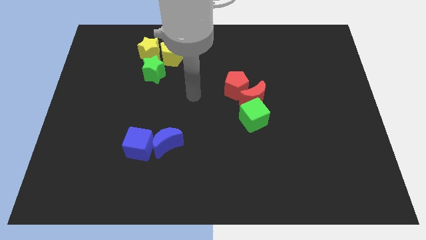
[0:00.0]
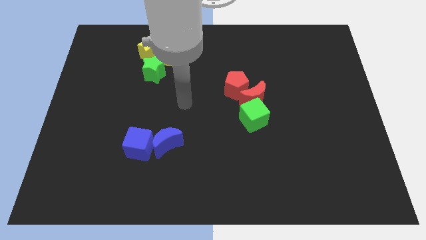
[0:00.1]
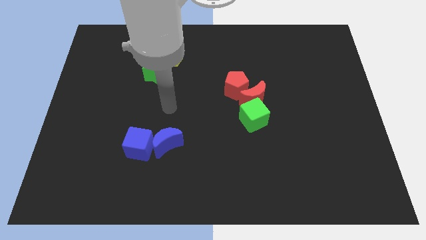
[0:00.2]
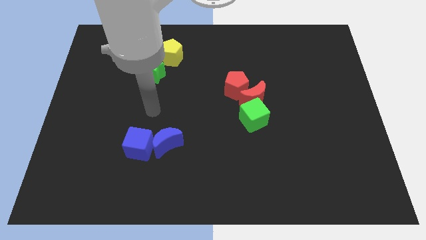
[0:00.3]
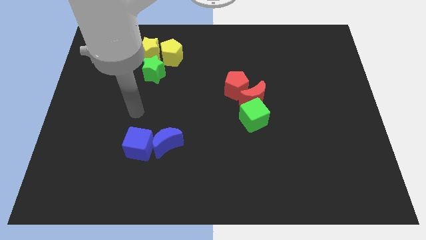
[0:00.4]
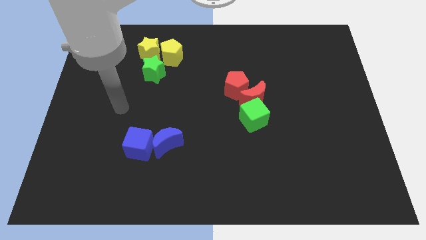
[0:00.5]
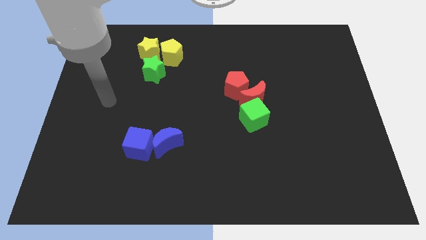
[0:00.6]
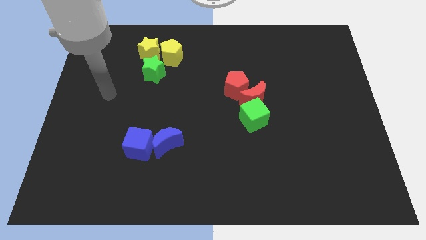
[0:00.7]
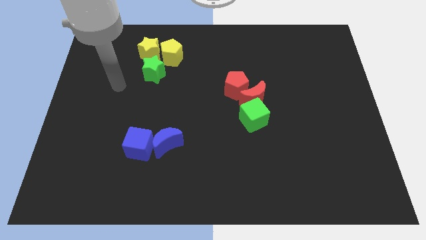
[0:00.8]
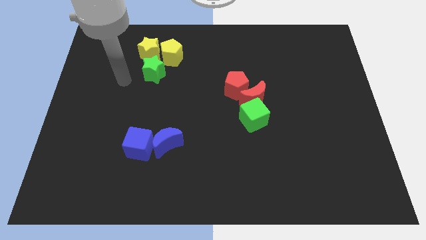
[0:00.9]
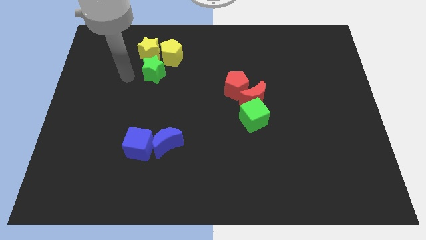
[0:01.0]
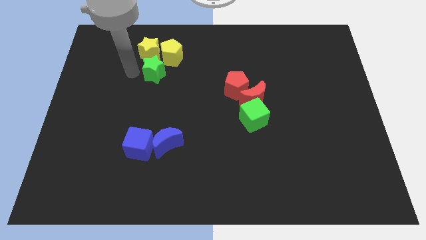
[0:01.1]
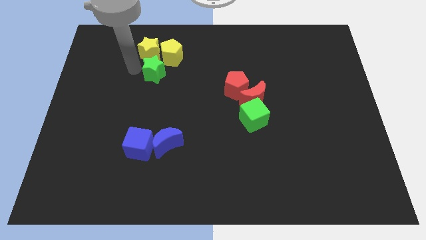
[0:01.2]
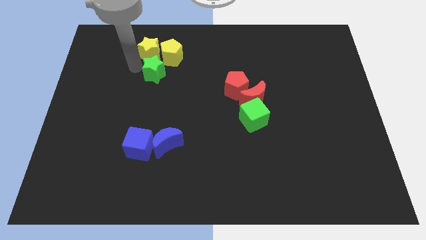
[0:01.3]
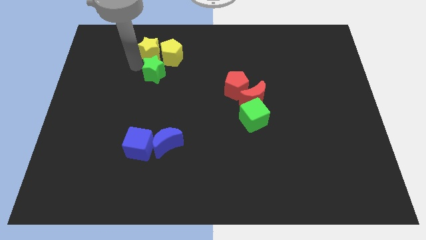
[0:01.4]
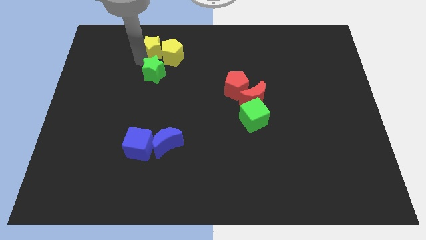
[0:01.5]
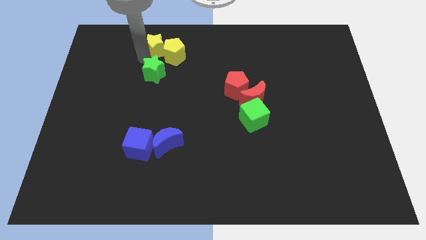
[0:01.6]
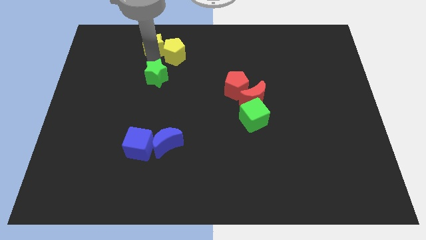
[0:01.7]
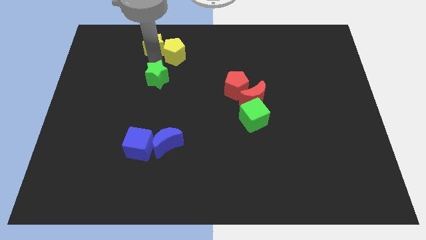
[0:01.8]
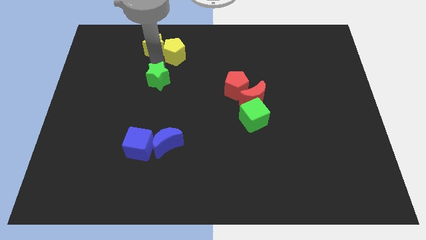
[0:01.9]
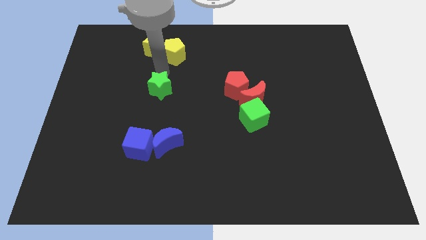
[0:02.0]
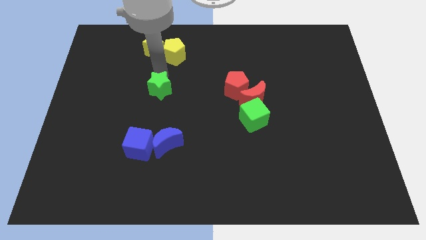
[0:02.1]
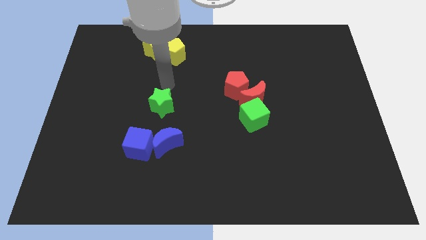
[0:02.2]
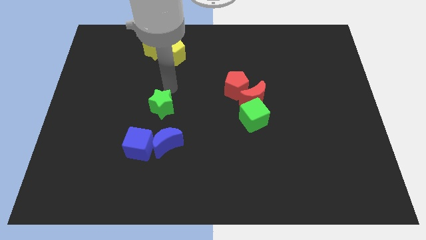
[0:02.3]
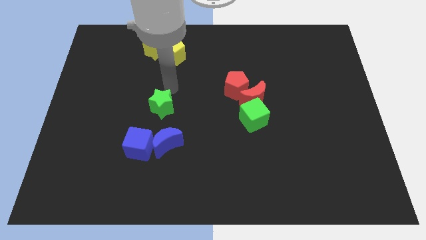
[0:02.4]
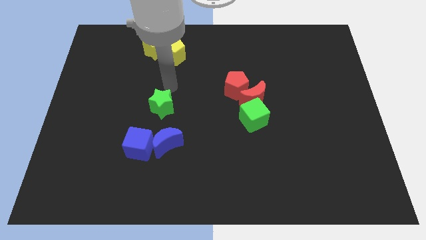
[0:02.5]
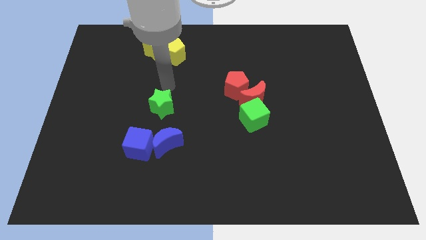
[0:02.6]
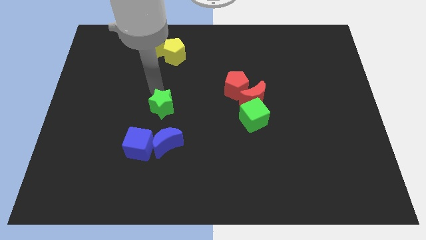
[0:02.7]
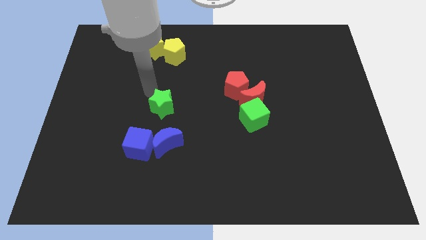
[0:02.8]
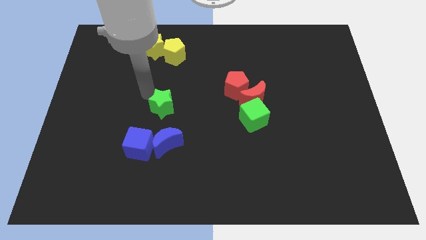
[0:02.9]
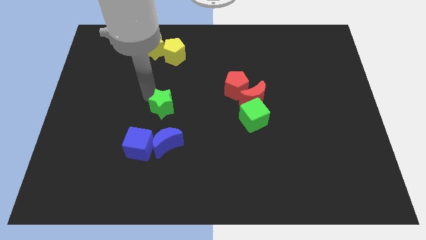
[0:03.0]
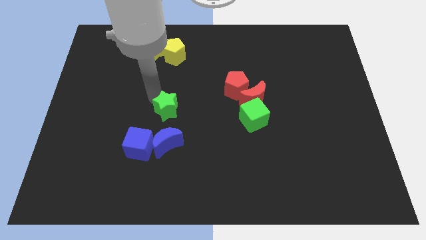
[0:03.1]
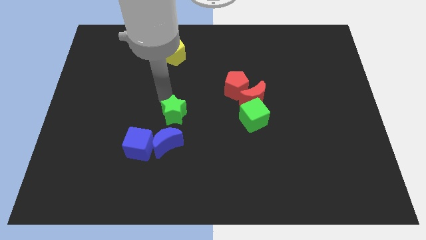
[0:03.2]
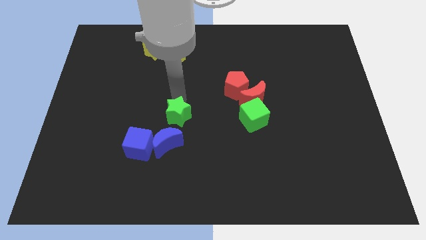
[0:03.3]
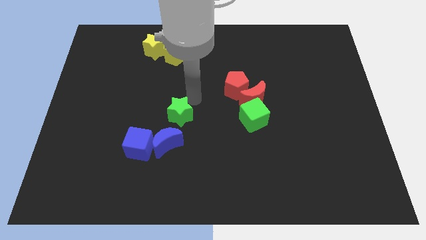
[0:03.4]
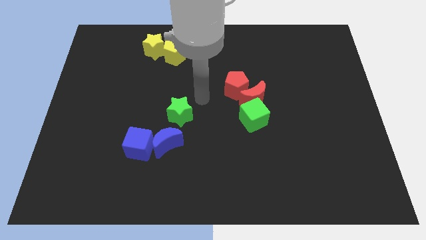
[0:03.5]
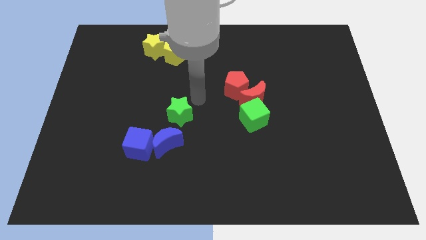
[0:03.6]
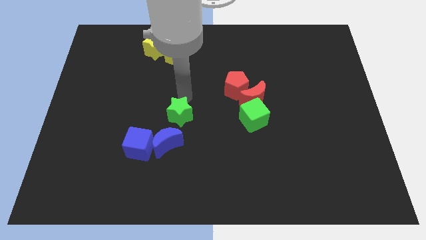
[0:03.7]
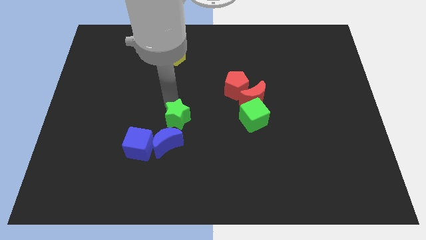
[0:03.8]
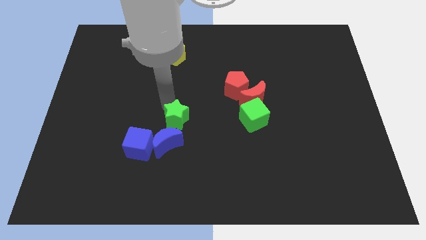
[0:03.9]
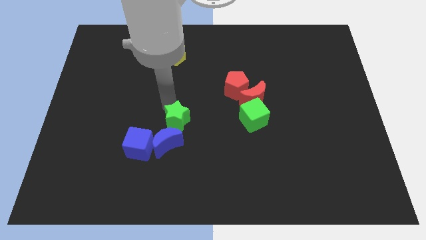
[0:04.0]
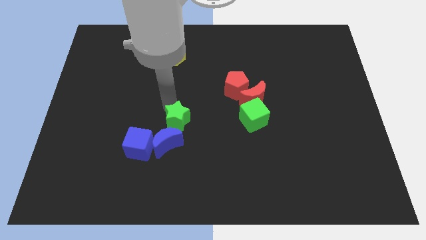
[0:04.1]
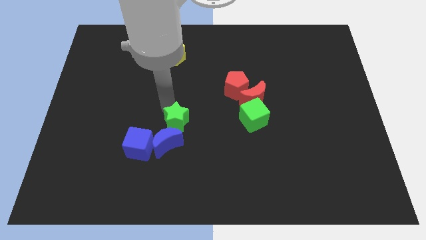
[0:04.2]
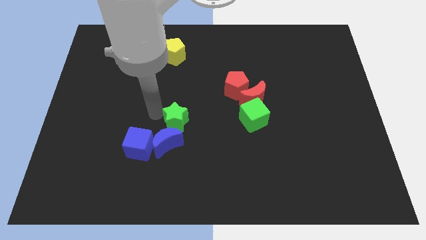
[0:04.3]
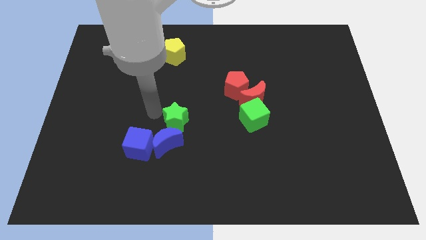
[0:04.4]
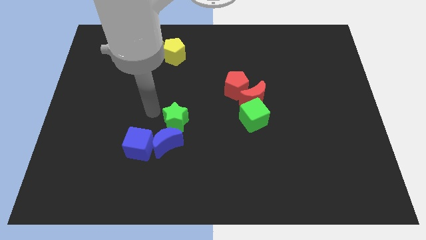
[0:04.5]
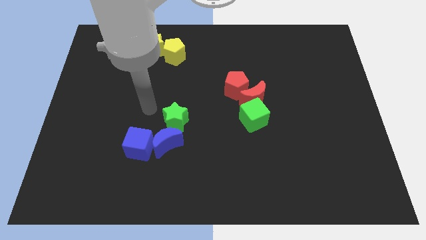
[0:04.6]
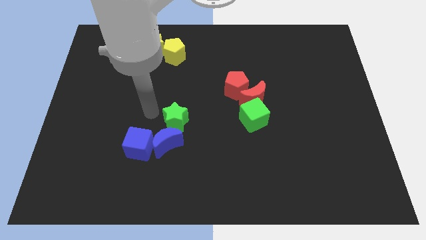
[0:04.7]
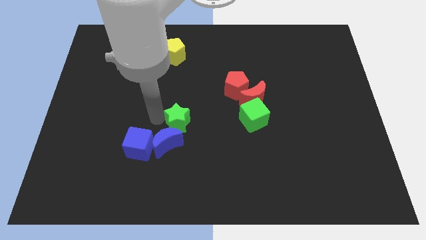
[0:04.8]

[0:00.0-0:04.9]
place the green star to the left of the green cube

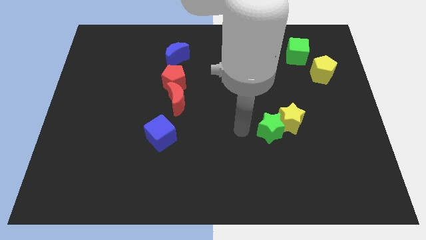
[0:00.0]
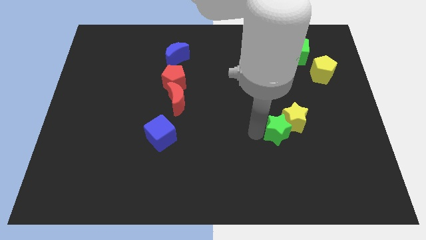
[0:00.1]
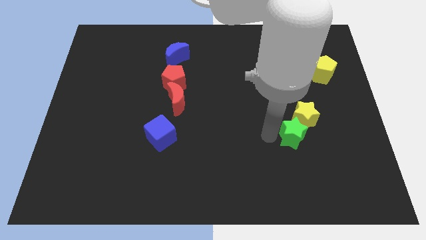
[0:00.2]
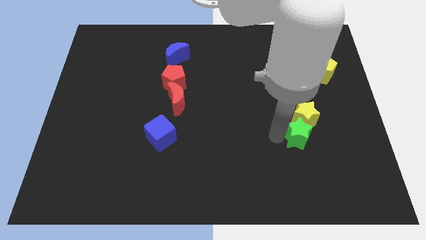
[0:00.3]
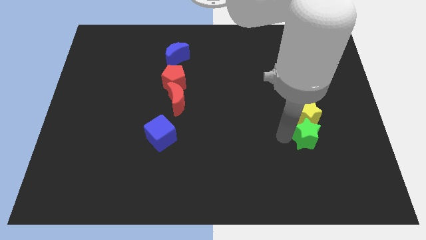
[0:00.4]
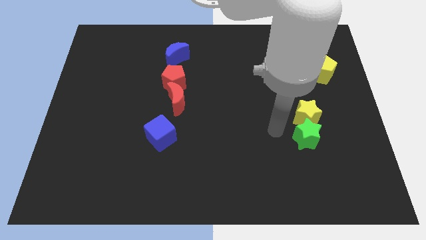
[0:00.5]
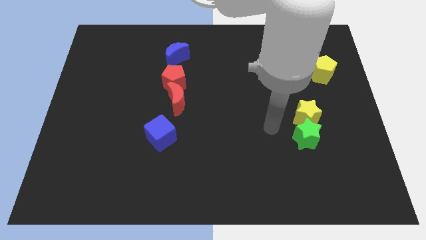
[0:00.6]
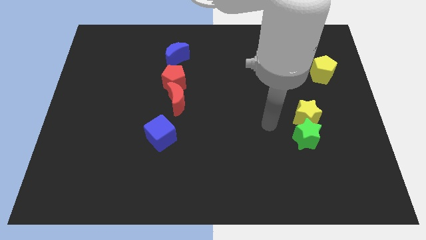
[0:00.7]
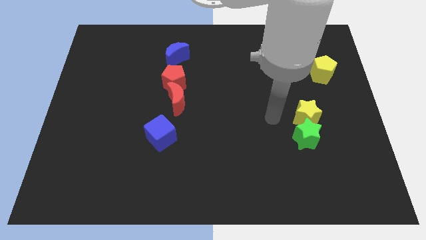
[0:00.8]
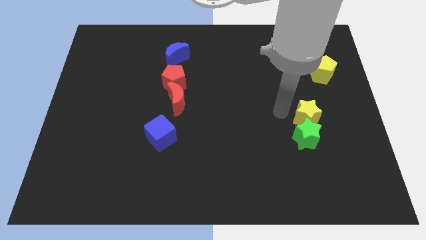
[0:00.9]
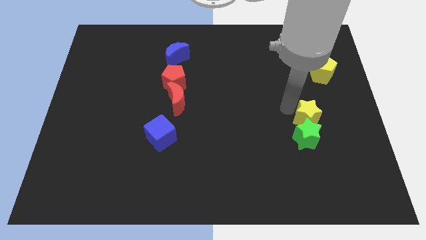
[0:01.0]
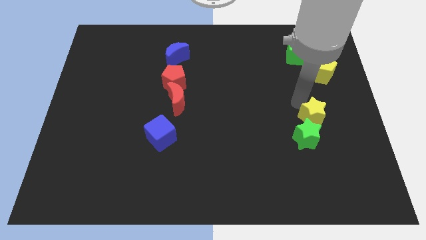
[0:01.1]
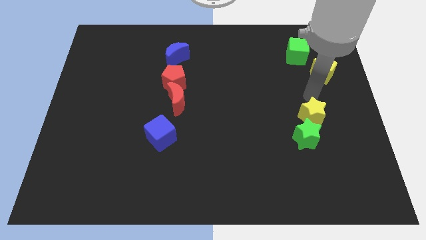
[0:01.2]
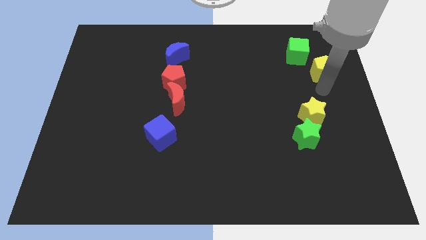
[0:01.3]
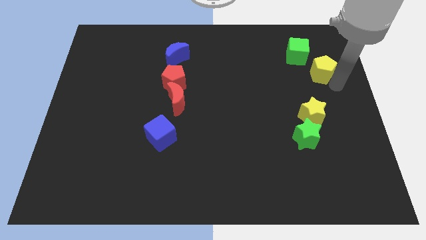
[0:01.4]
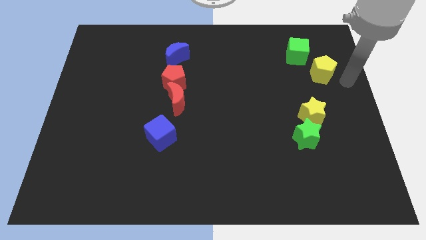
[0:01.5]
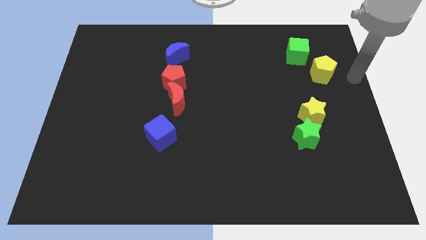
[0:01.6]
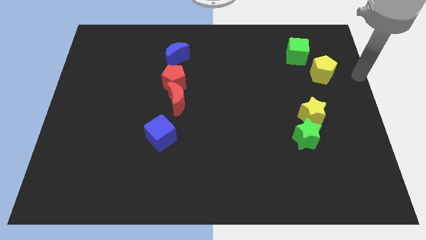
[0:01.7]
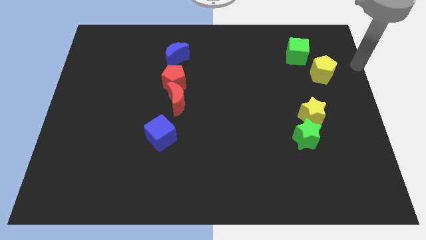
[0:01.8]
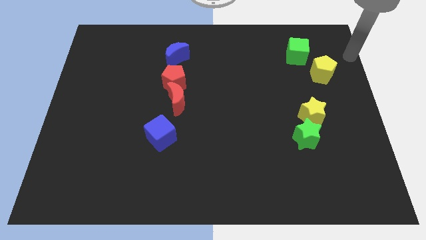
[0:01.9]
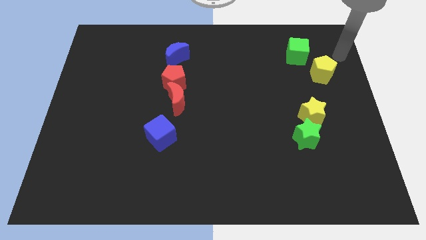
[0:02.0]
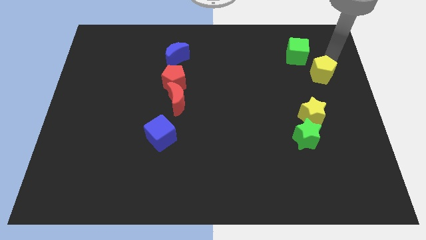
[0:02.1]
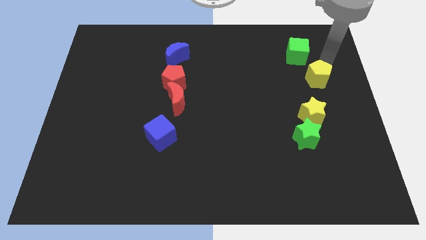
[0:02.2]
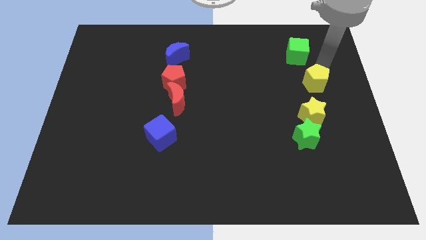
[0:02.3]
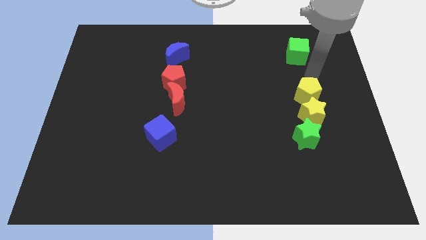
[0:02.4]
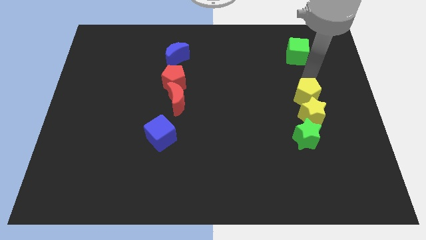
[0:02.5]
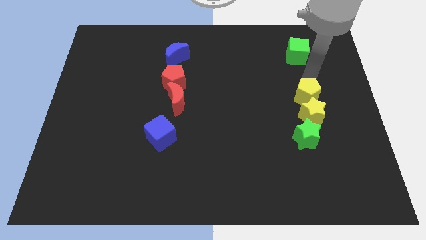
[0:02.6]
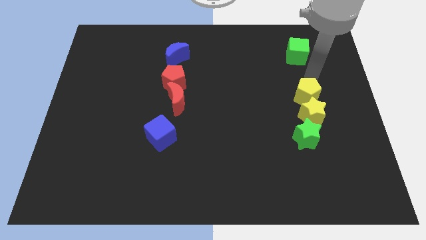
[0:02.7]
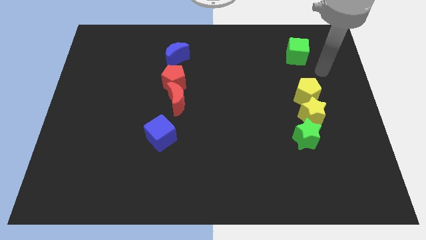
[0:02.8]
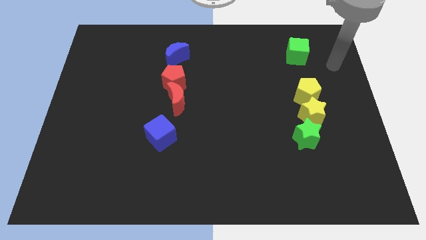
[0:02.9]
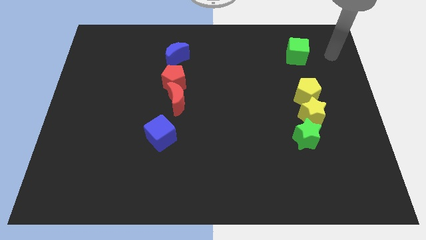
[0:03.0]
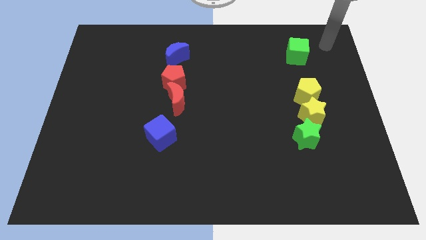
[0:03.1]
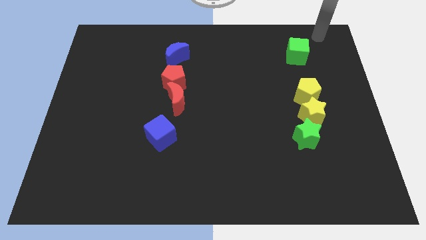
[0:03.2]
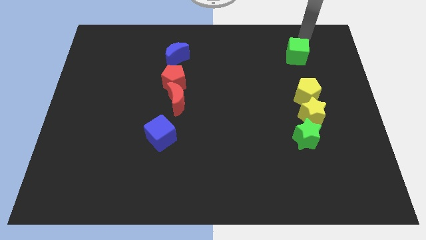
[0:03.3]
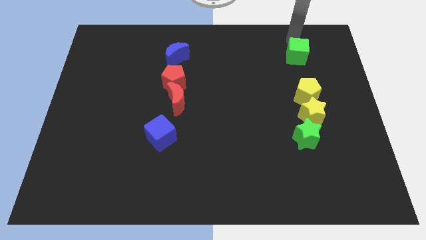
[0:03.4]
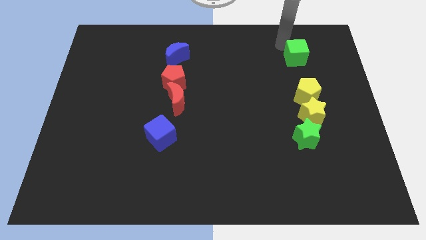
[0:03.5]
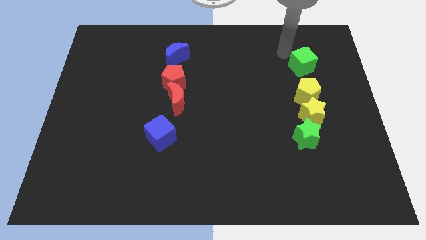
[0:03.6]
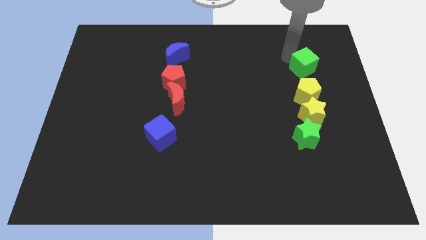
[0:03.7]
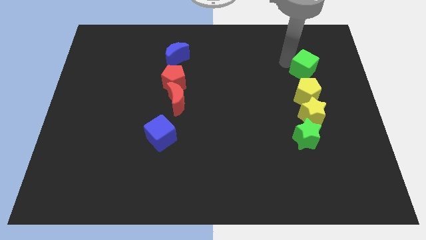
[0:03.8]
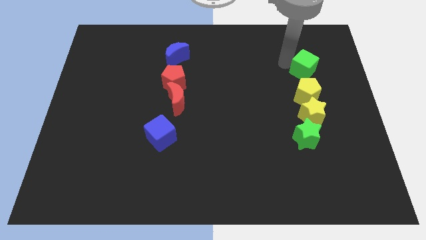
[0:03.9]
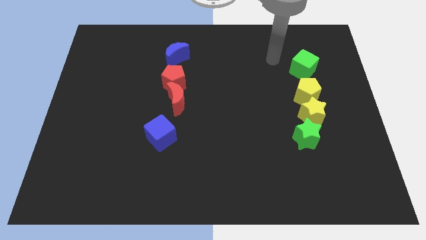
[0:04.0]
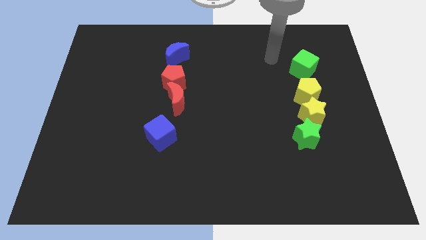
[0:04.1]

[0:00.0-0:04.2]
adjust green and yellow blocks to form a vertical line
